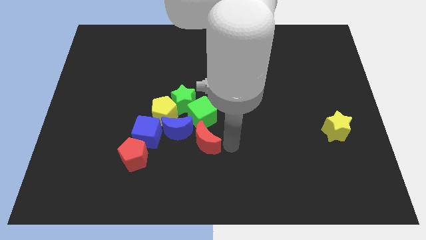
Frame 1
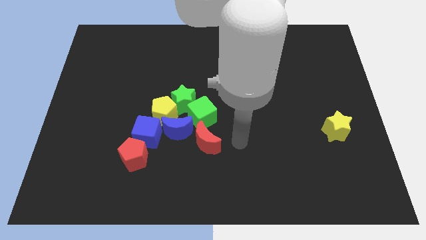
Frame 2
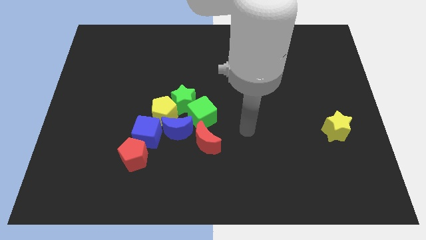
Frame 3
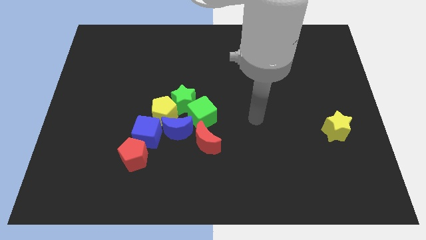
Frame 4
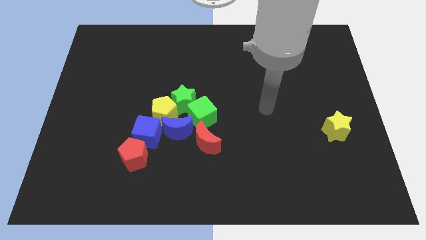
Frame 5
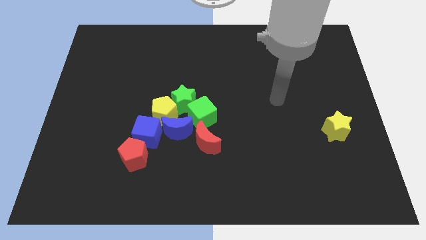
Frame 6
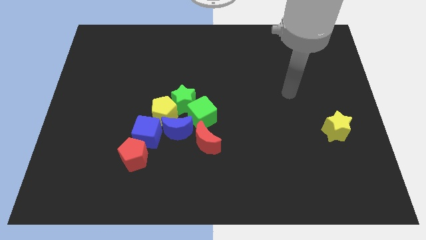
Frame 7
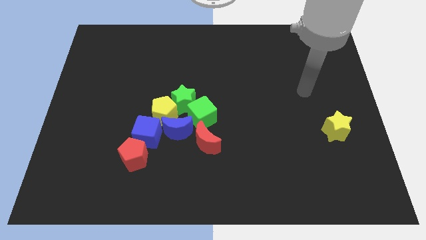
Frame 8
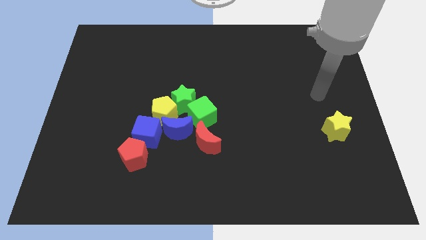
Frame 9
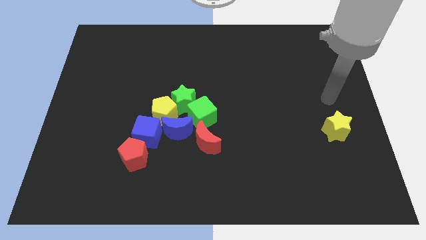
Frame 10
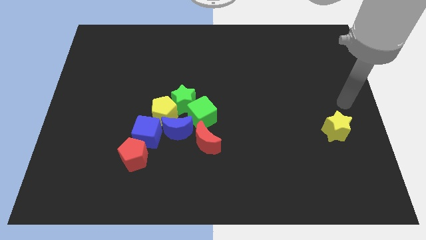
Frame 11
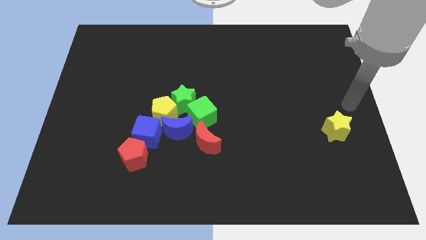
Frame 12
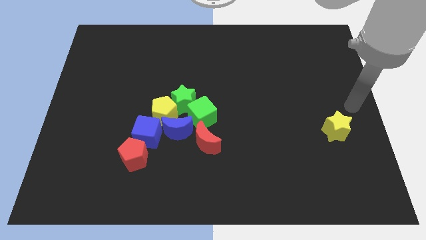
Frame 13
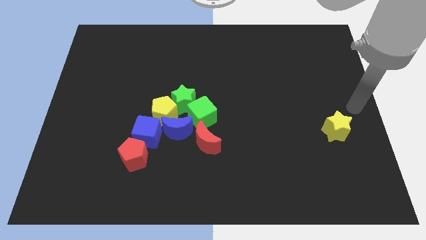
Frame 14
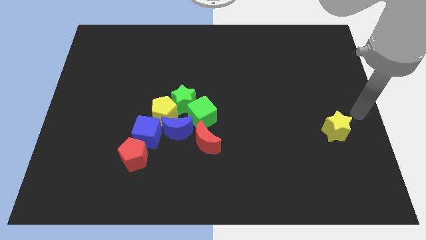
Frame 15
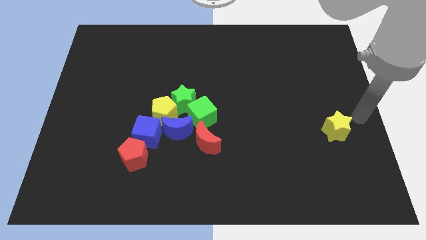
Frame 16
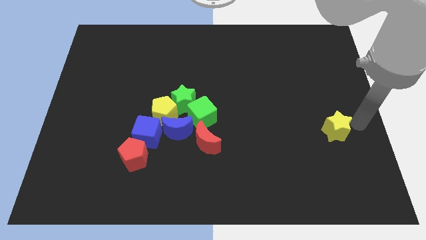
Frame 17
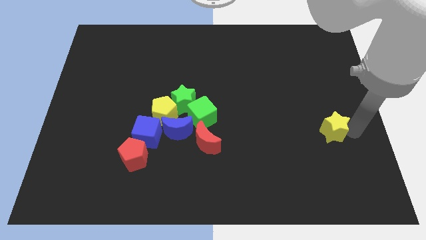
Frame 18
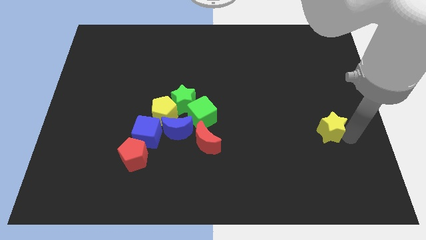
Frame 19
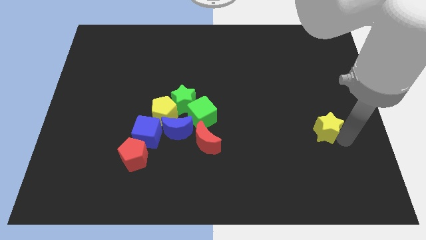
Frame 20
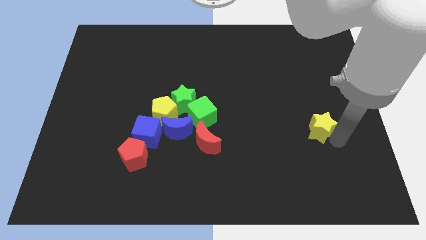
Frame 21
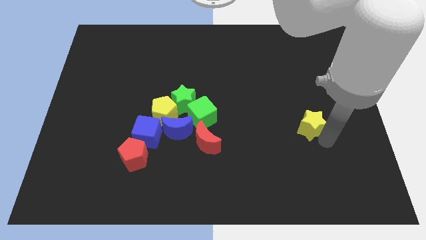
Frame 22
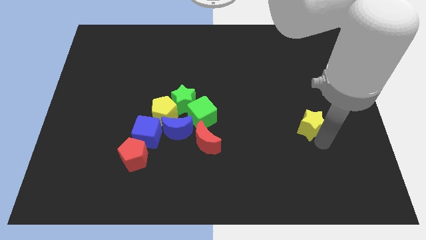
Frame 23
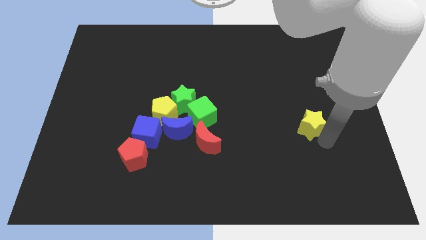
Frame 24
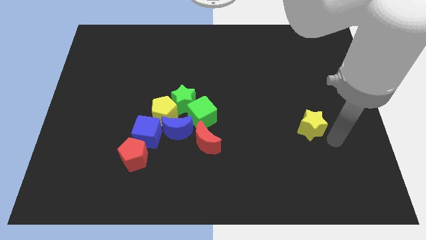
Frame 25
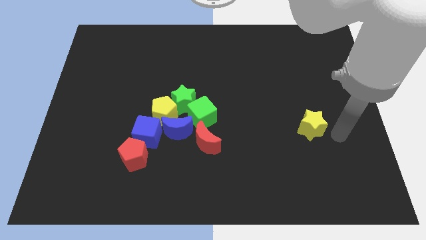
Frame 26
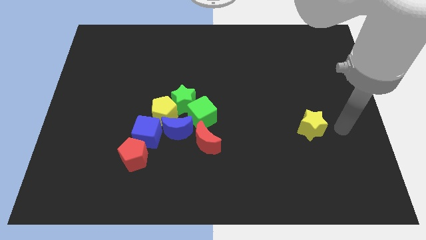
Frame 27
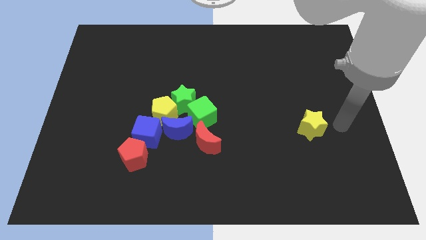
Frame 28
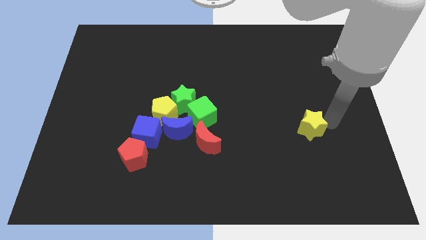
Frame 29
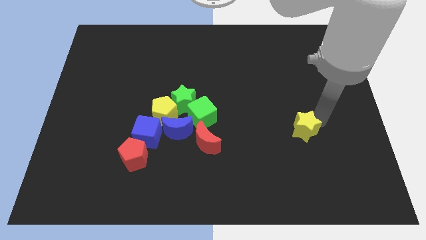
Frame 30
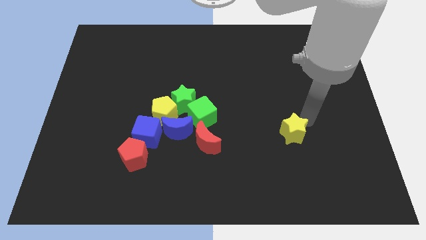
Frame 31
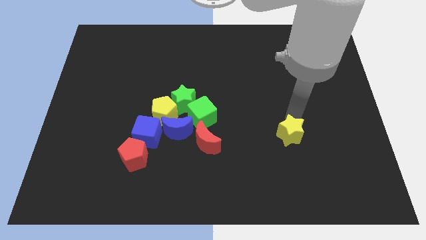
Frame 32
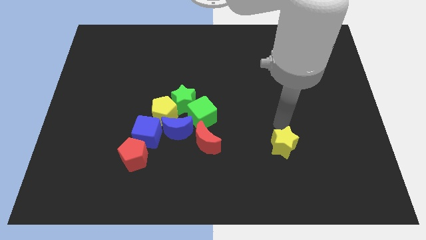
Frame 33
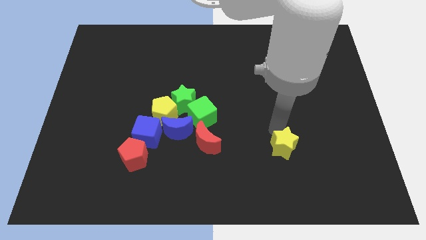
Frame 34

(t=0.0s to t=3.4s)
move the yellow star horizontally to the right side of the red crescent

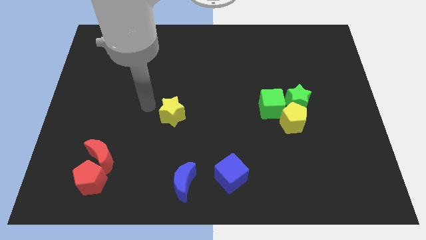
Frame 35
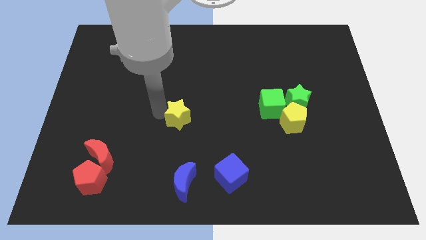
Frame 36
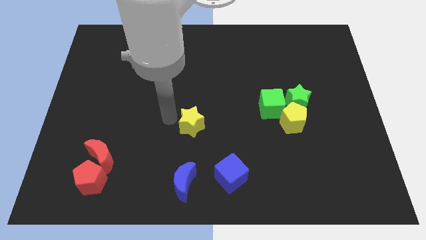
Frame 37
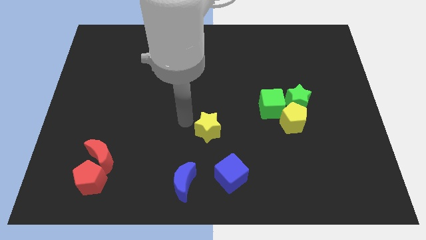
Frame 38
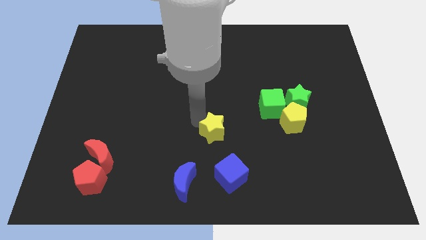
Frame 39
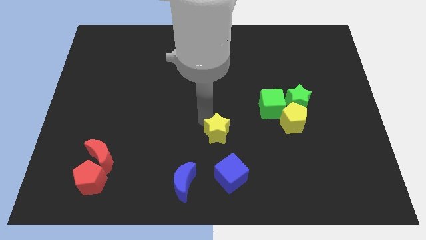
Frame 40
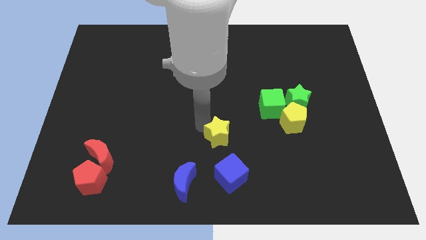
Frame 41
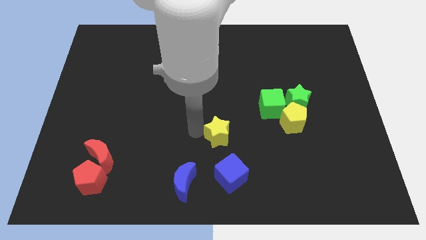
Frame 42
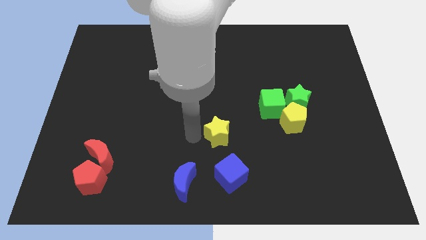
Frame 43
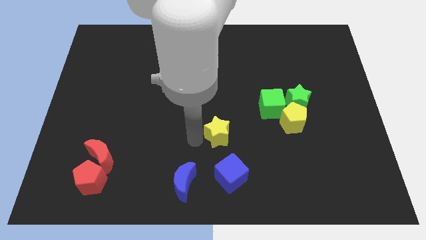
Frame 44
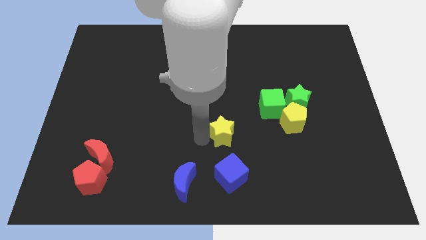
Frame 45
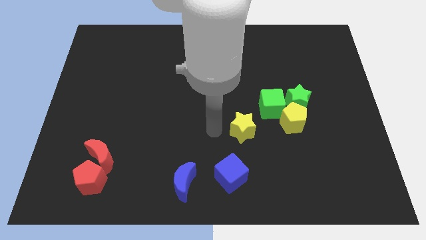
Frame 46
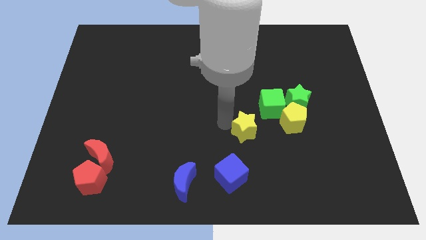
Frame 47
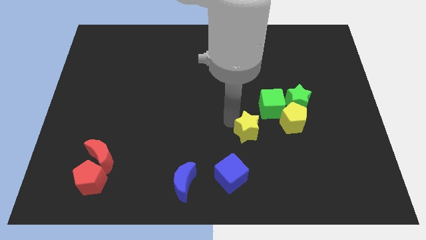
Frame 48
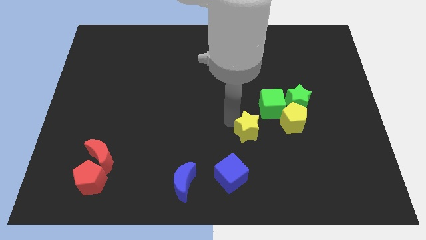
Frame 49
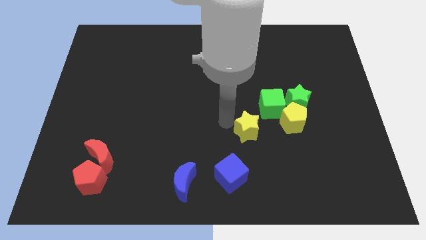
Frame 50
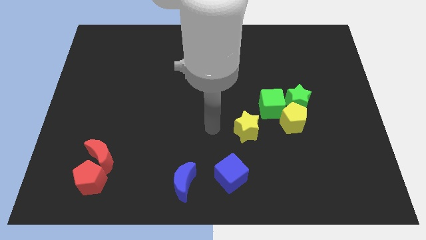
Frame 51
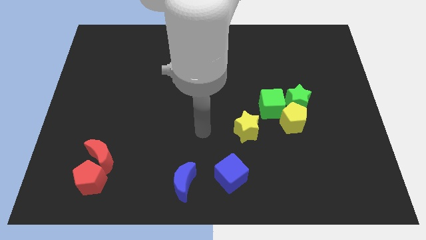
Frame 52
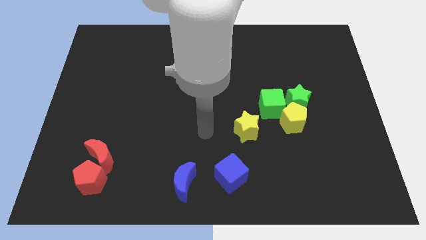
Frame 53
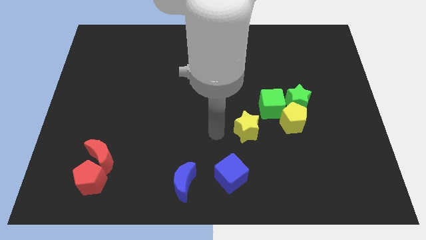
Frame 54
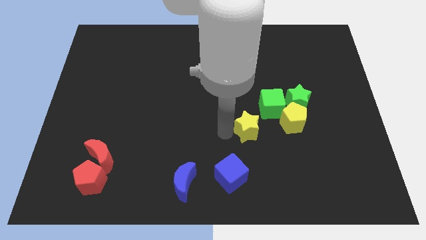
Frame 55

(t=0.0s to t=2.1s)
move yellow star towards the blue cube

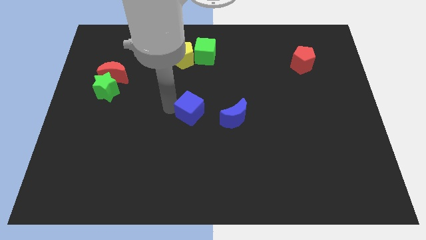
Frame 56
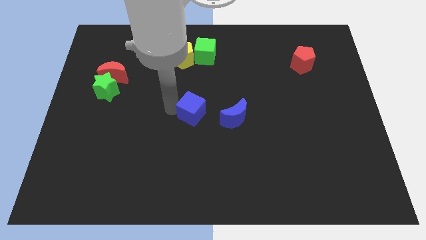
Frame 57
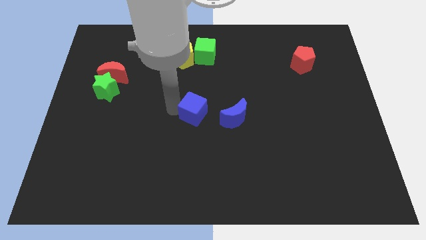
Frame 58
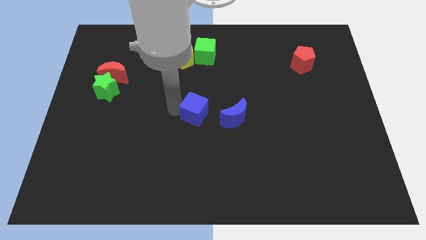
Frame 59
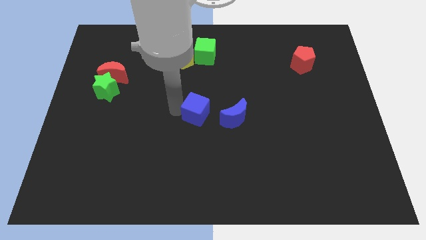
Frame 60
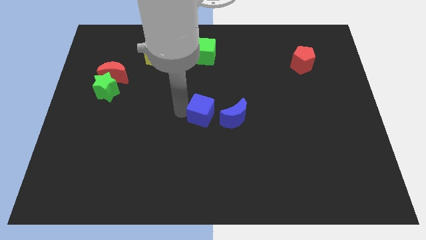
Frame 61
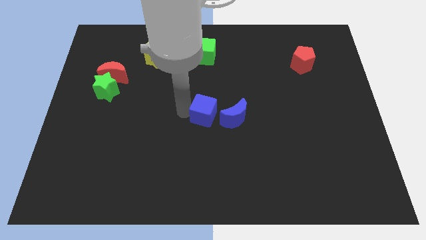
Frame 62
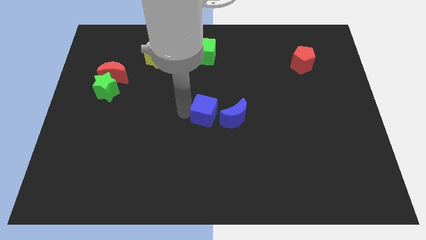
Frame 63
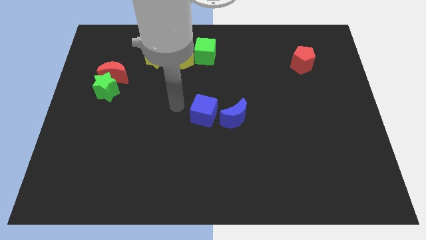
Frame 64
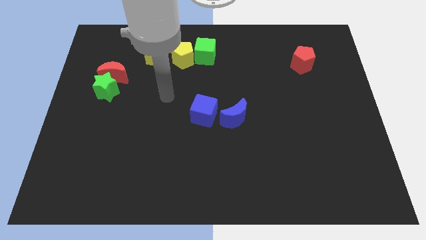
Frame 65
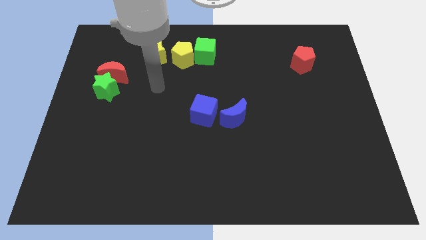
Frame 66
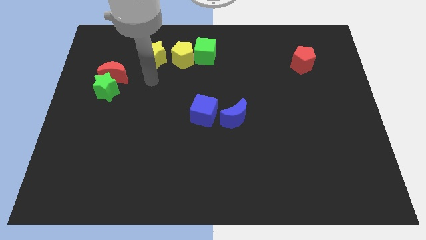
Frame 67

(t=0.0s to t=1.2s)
move blue cube towards blue moon

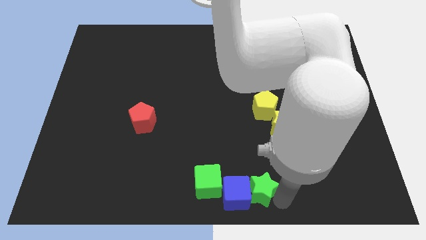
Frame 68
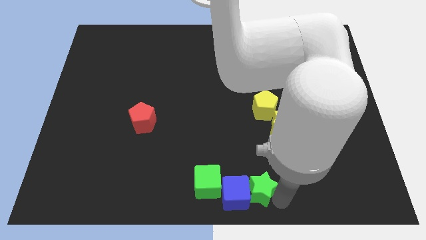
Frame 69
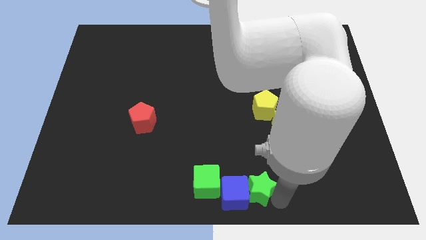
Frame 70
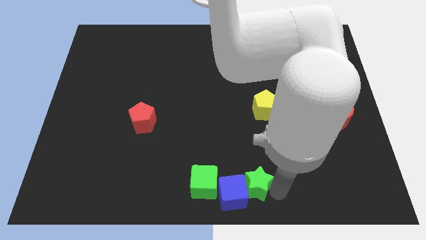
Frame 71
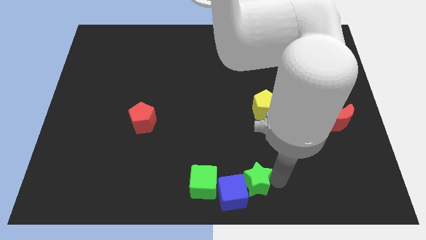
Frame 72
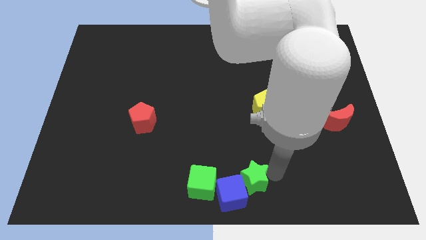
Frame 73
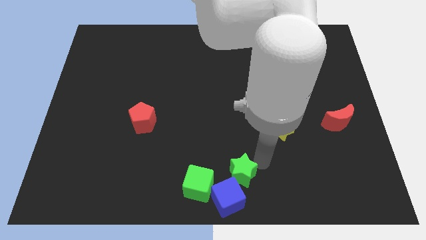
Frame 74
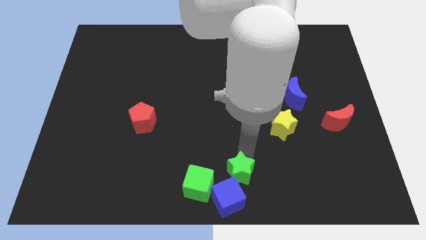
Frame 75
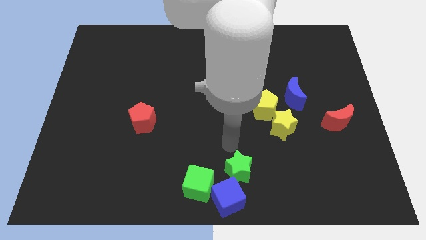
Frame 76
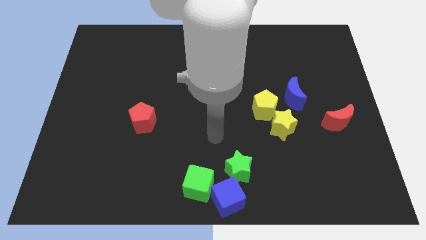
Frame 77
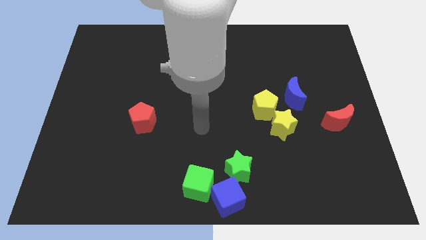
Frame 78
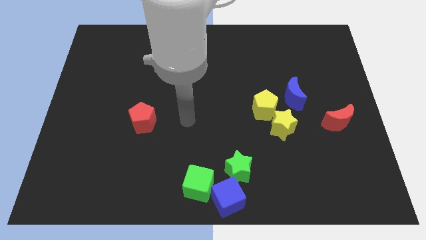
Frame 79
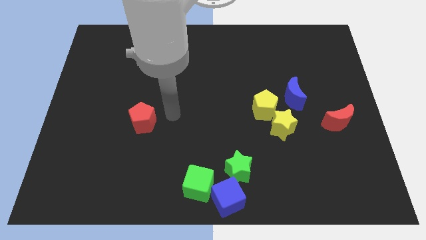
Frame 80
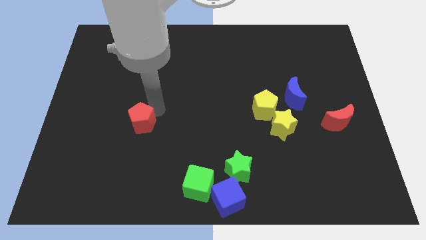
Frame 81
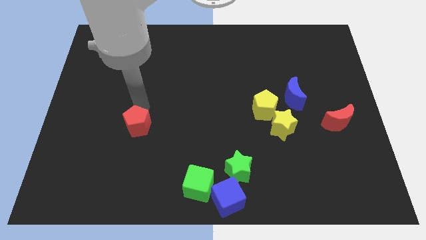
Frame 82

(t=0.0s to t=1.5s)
move the green star into the blue cube

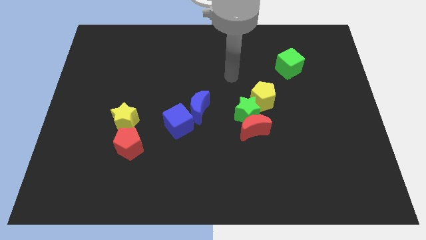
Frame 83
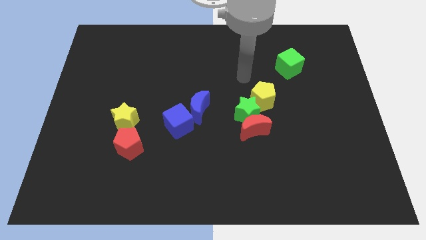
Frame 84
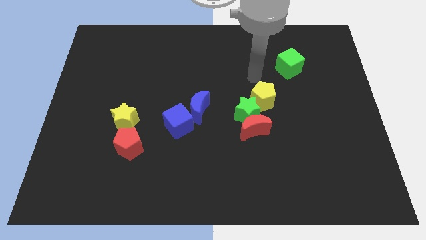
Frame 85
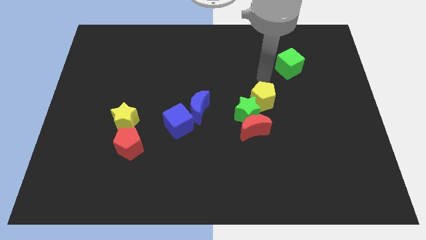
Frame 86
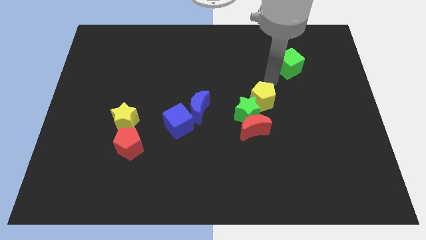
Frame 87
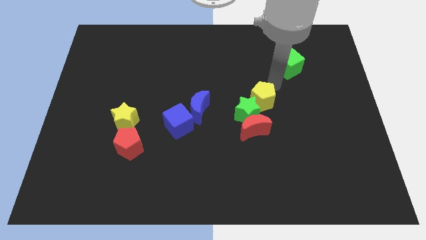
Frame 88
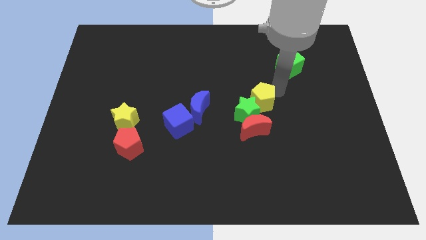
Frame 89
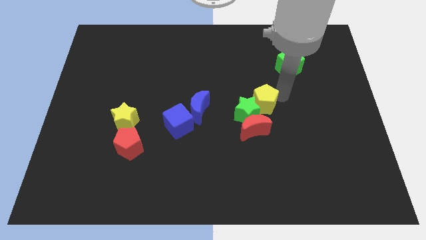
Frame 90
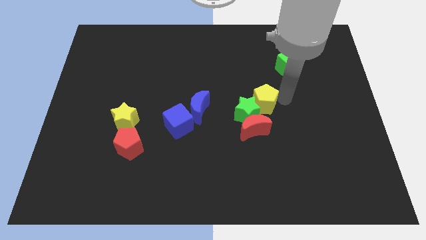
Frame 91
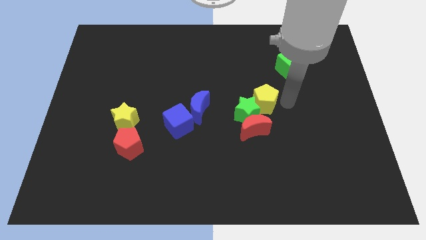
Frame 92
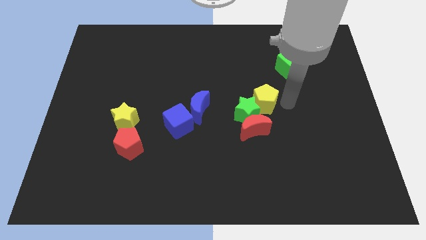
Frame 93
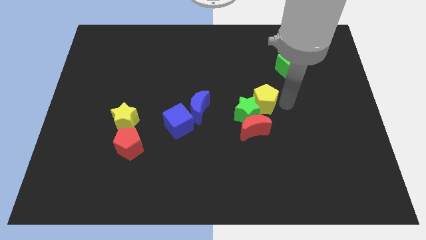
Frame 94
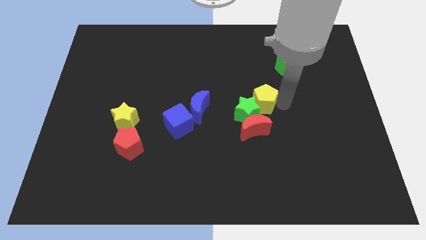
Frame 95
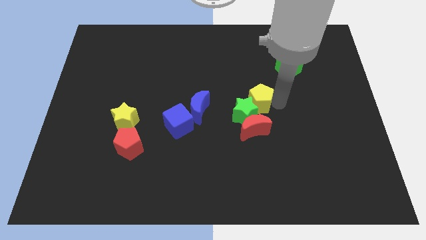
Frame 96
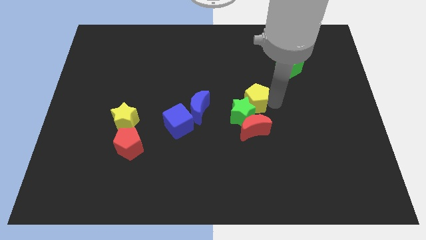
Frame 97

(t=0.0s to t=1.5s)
move the yellow pentagon into the yellow star
